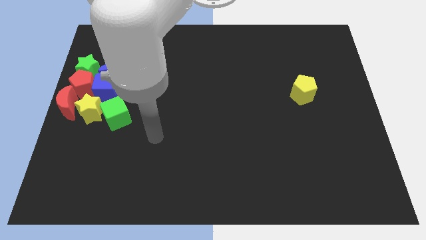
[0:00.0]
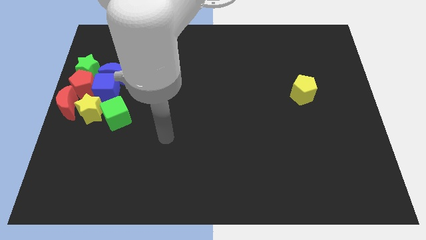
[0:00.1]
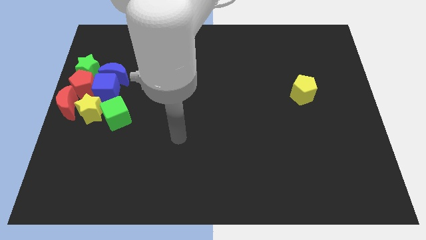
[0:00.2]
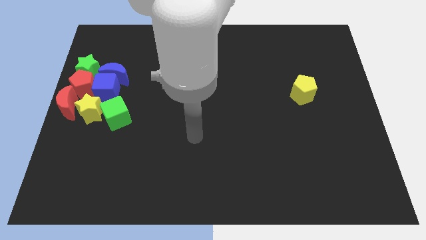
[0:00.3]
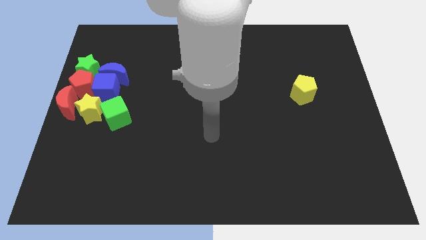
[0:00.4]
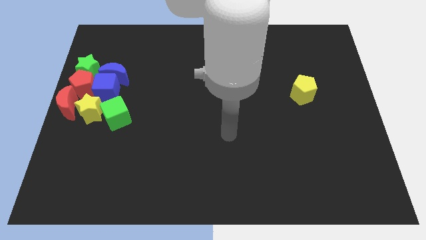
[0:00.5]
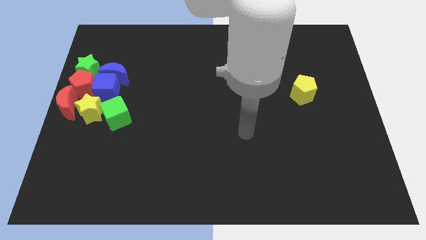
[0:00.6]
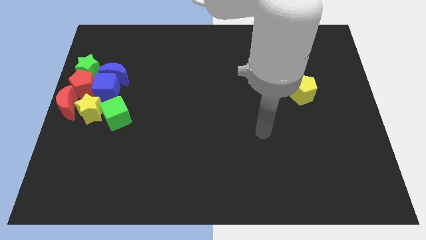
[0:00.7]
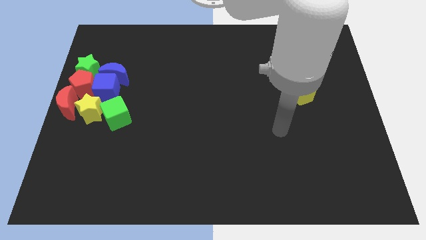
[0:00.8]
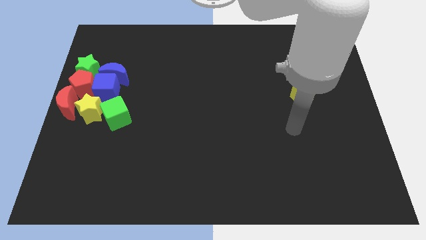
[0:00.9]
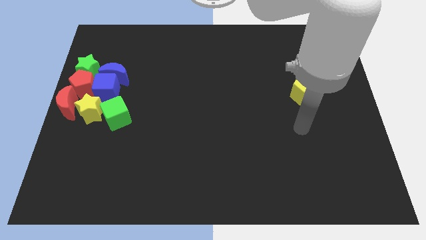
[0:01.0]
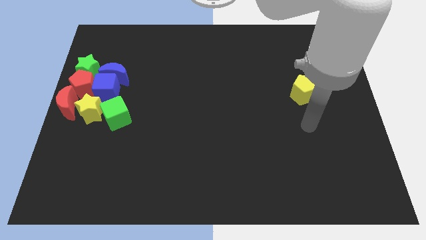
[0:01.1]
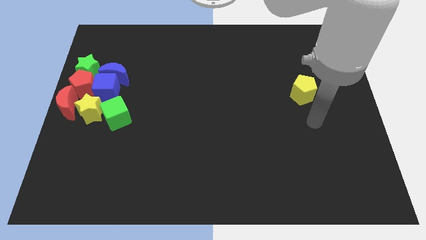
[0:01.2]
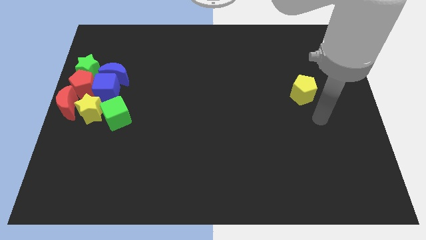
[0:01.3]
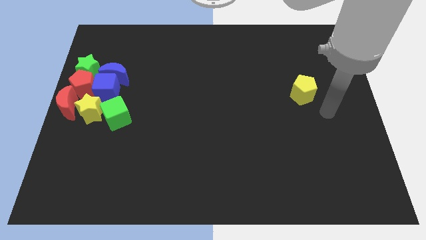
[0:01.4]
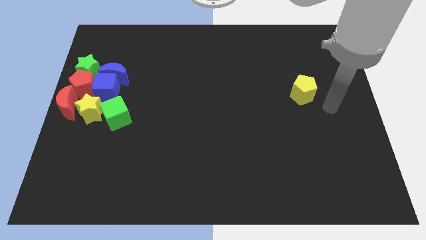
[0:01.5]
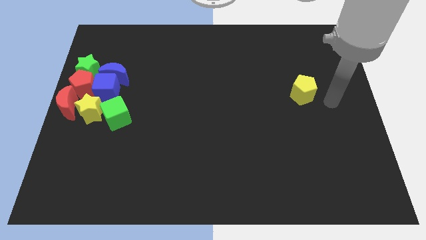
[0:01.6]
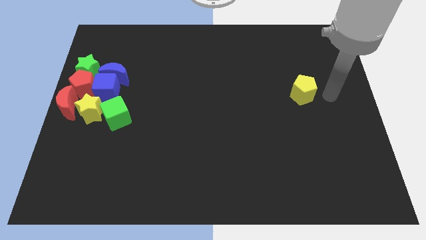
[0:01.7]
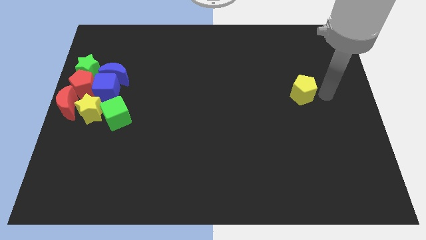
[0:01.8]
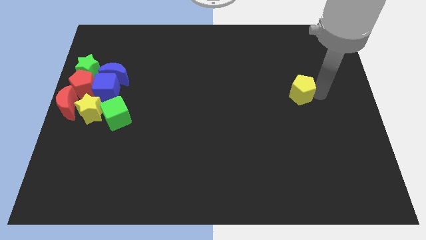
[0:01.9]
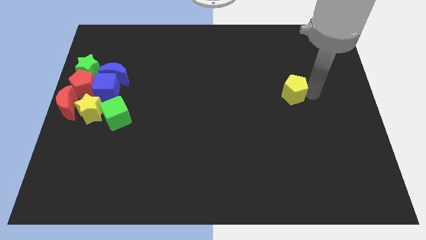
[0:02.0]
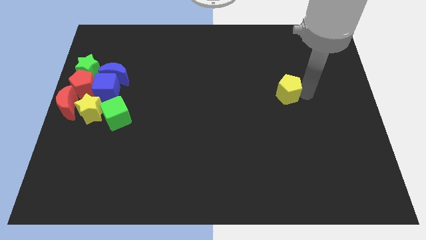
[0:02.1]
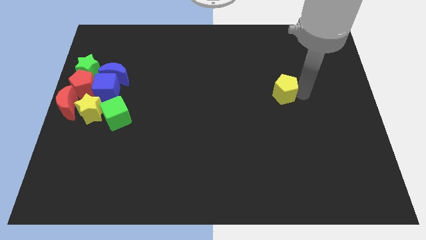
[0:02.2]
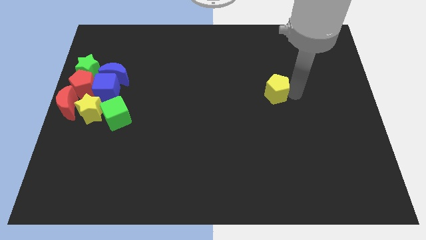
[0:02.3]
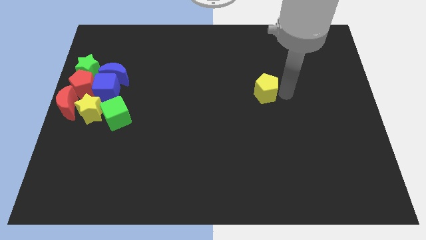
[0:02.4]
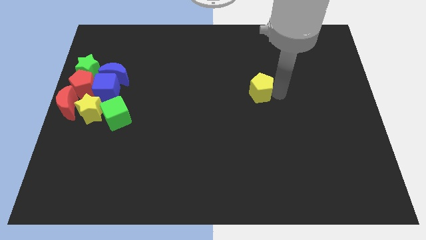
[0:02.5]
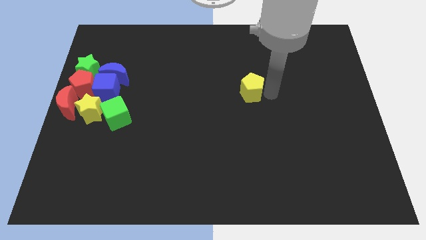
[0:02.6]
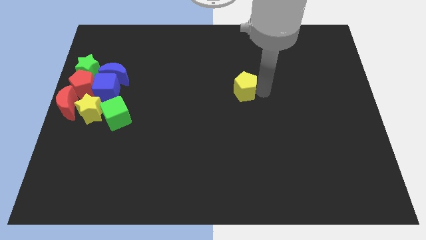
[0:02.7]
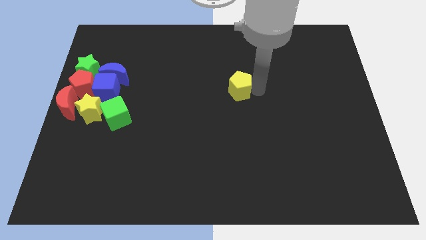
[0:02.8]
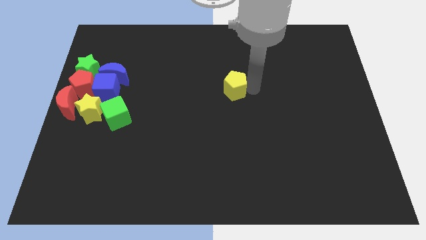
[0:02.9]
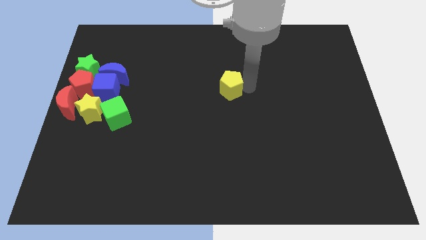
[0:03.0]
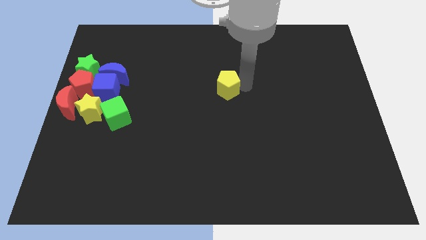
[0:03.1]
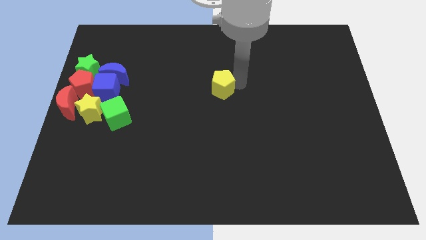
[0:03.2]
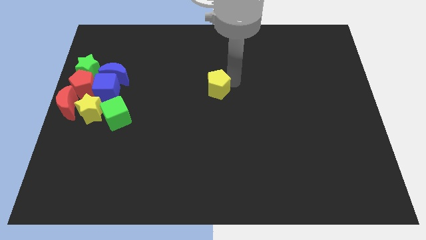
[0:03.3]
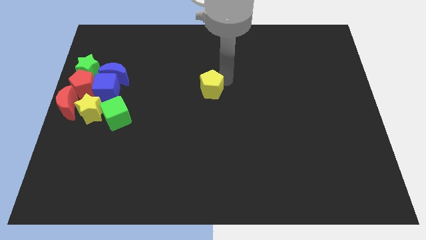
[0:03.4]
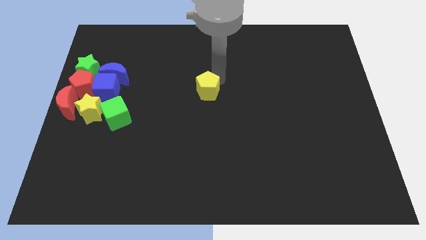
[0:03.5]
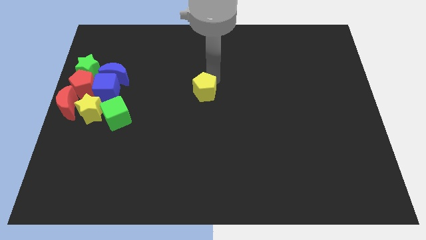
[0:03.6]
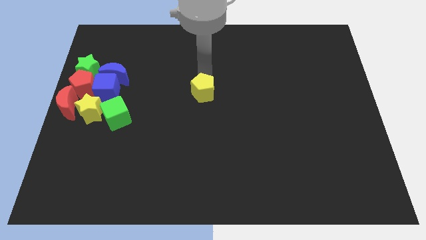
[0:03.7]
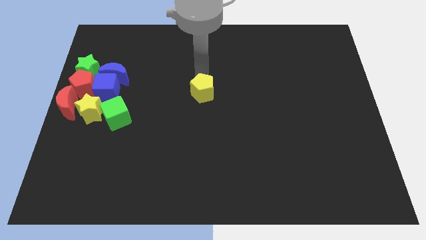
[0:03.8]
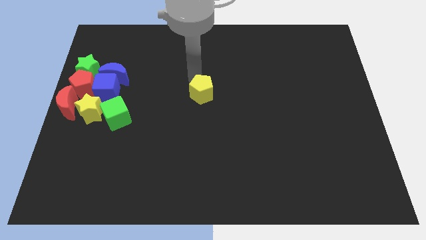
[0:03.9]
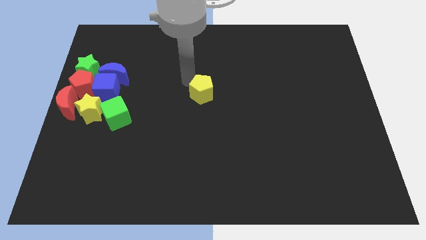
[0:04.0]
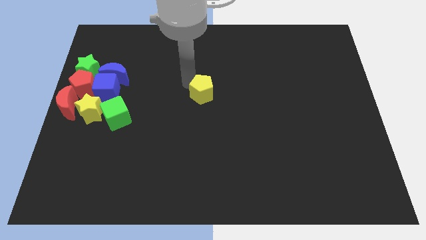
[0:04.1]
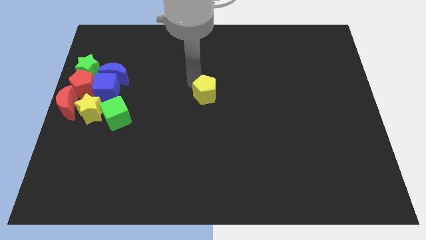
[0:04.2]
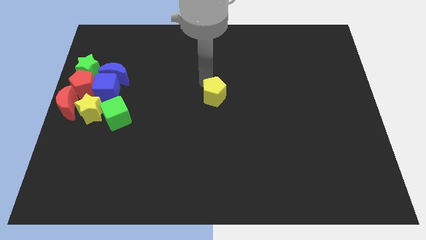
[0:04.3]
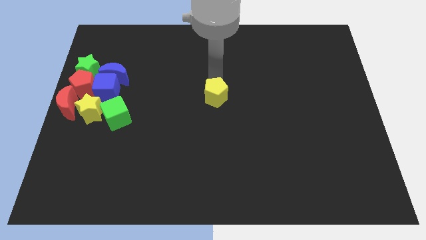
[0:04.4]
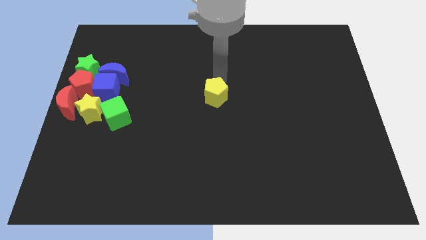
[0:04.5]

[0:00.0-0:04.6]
place the yellow pentagon at the center of the board

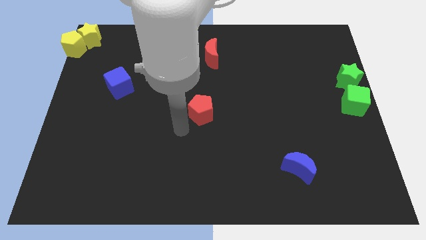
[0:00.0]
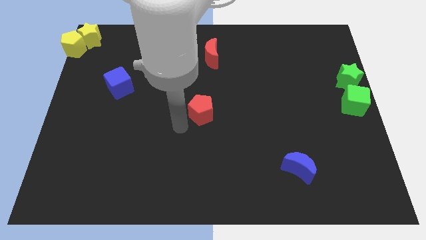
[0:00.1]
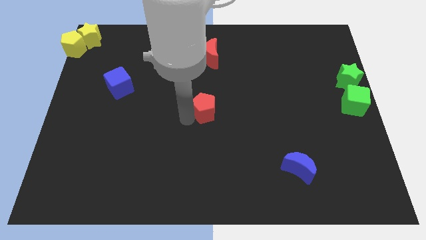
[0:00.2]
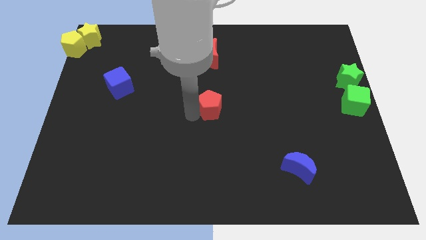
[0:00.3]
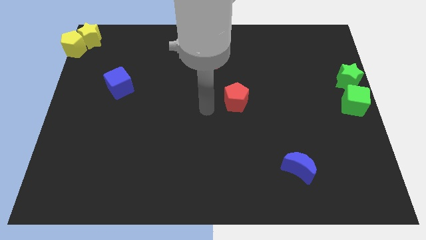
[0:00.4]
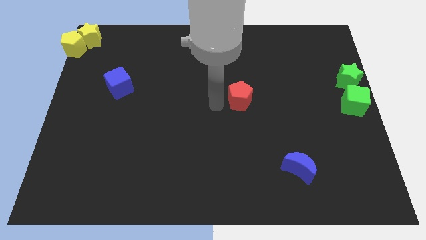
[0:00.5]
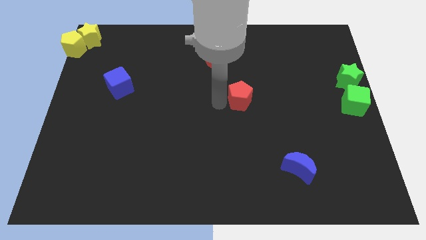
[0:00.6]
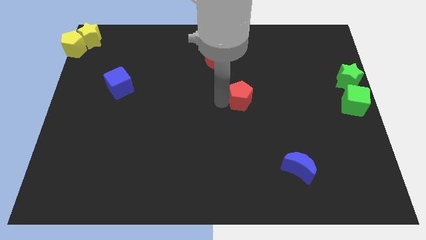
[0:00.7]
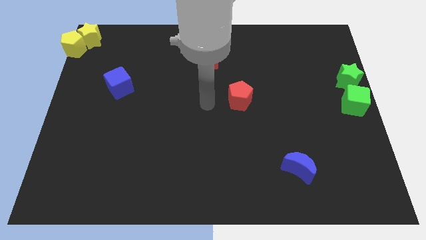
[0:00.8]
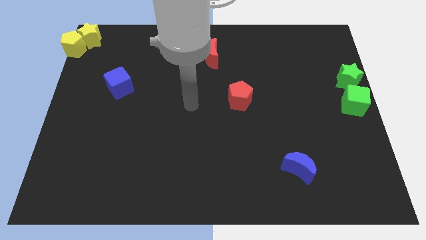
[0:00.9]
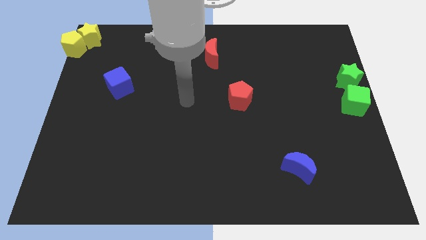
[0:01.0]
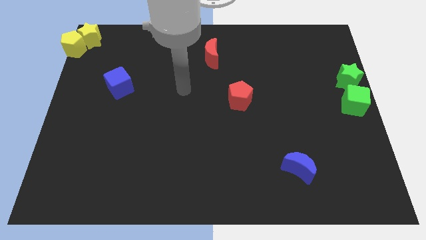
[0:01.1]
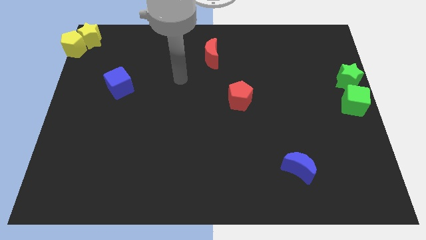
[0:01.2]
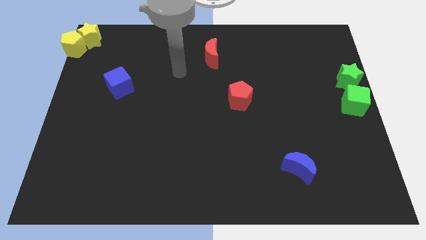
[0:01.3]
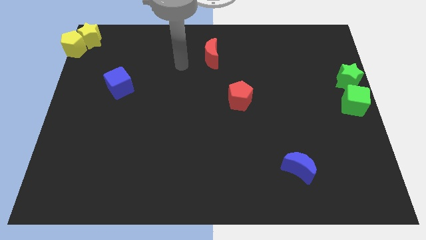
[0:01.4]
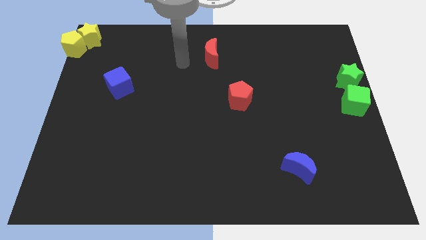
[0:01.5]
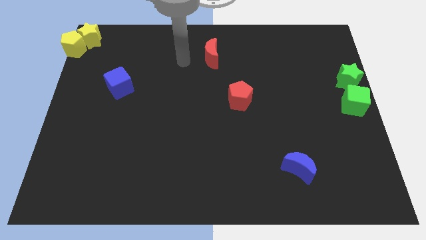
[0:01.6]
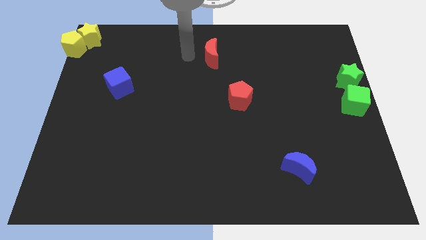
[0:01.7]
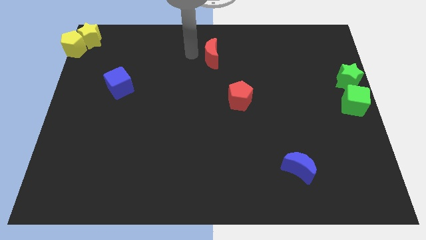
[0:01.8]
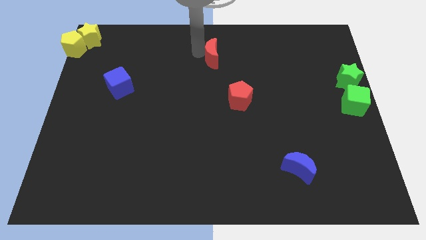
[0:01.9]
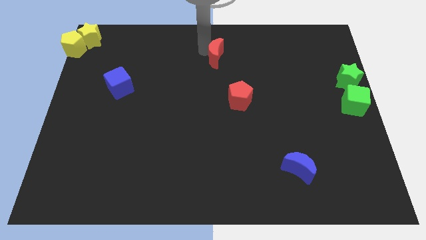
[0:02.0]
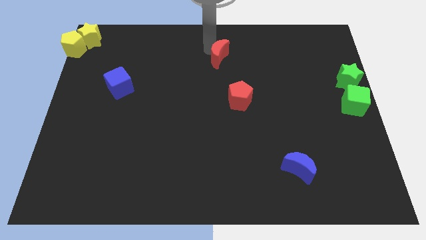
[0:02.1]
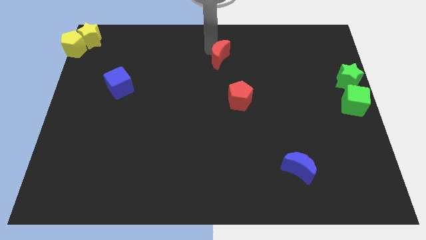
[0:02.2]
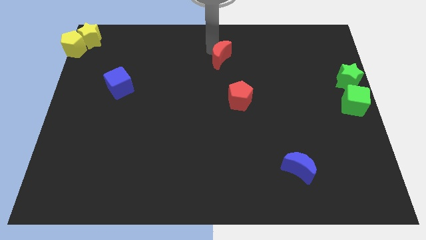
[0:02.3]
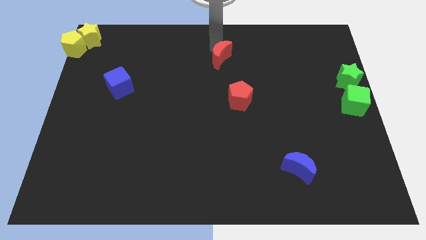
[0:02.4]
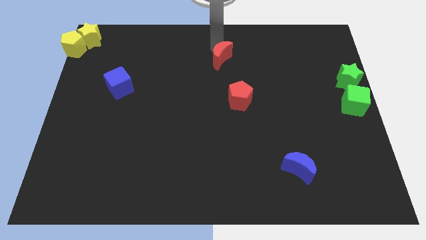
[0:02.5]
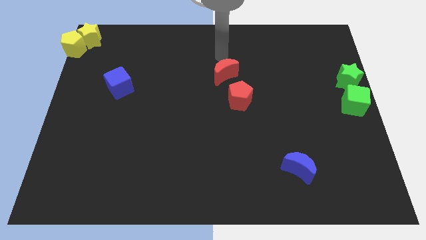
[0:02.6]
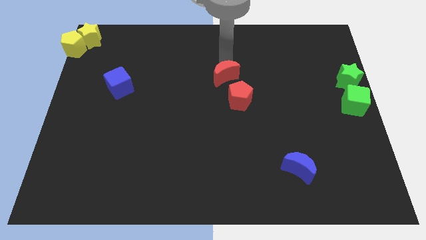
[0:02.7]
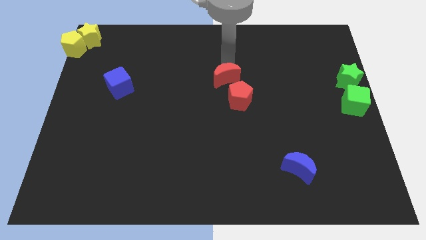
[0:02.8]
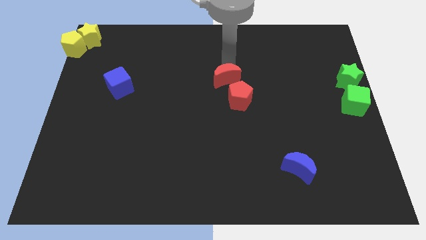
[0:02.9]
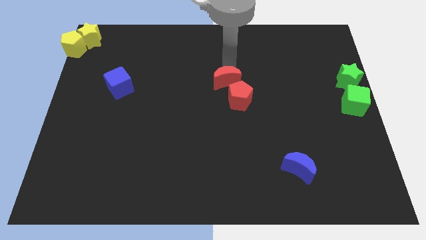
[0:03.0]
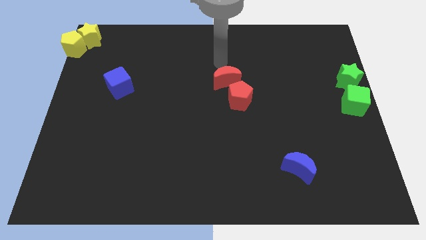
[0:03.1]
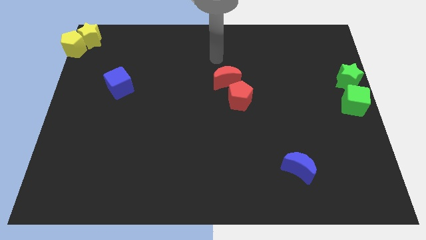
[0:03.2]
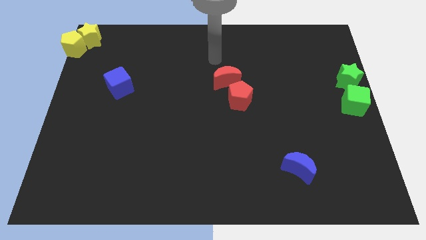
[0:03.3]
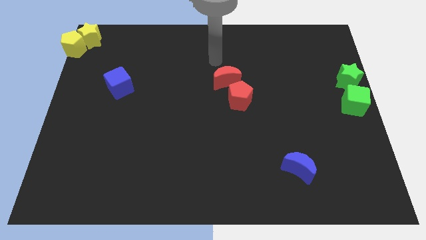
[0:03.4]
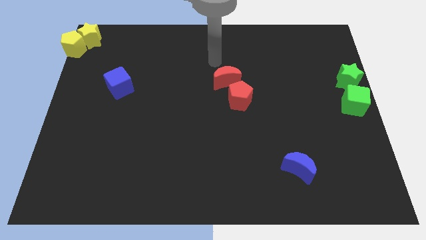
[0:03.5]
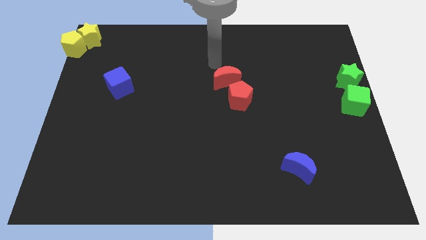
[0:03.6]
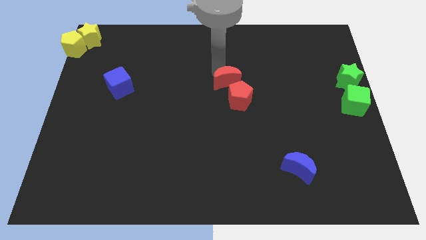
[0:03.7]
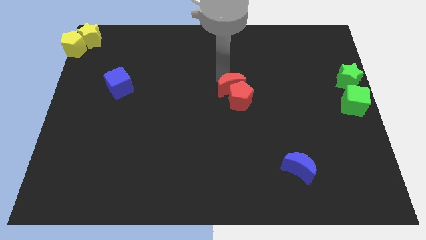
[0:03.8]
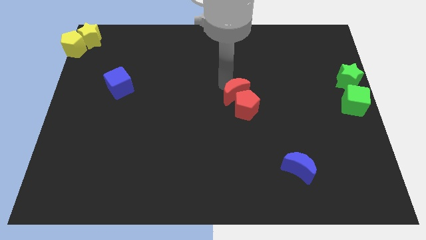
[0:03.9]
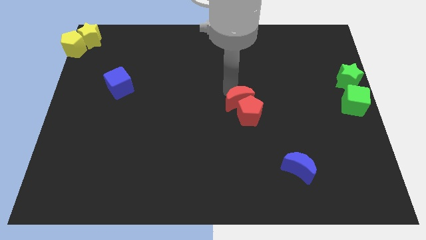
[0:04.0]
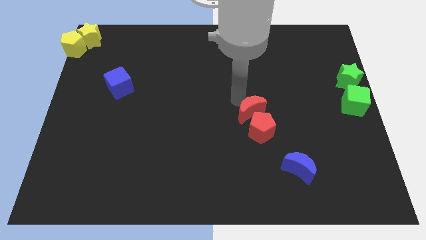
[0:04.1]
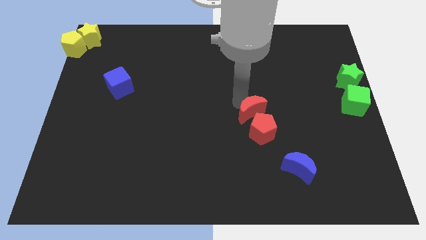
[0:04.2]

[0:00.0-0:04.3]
slide the red blocks towards the blue crescent
